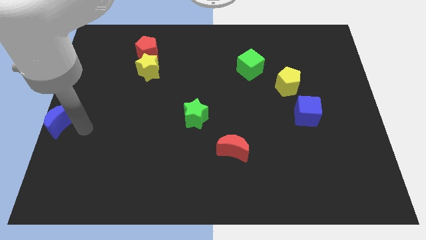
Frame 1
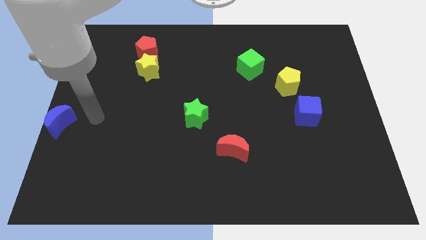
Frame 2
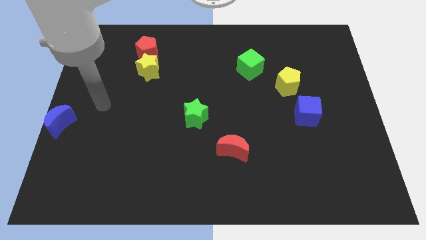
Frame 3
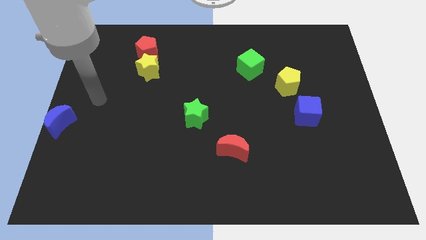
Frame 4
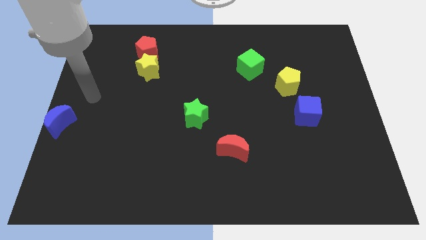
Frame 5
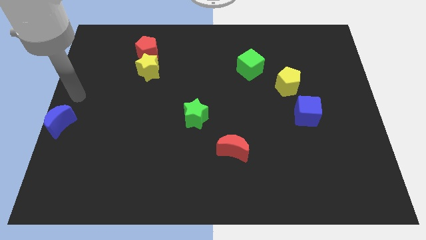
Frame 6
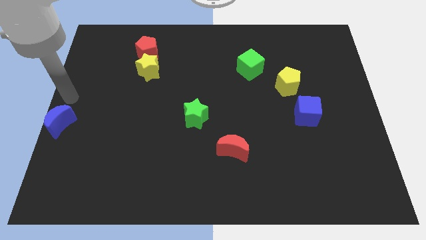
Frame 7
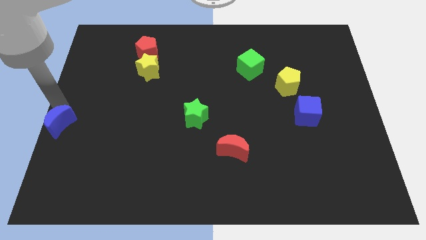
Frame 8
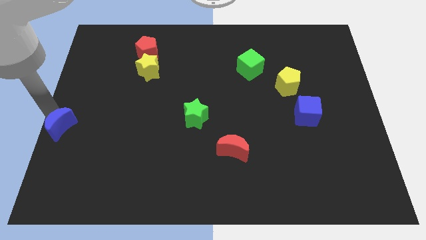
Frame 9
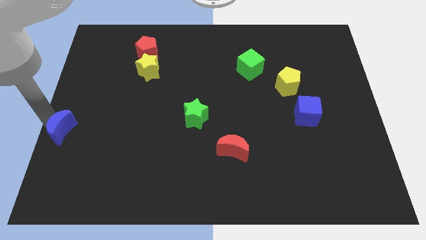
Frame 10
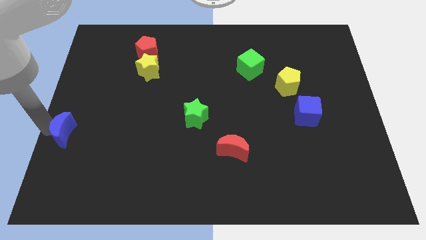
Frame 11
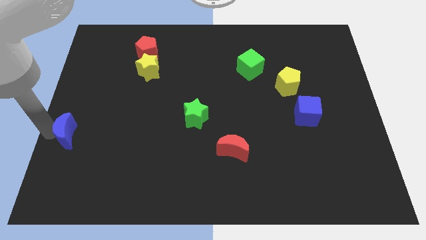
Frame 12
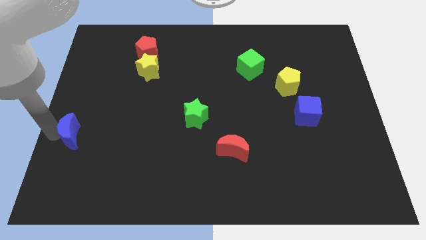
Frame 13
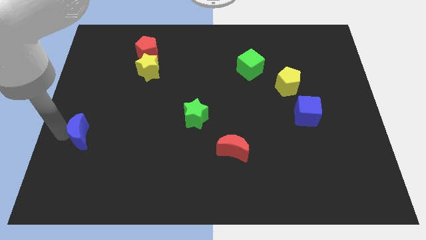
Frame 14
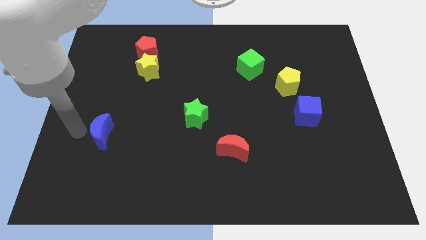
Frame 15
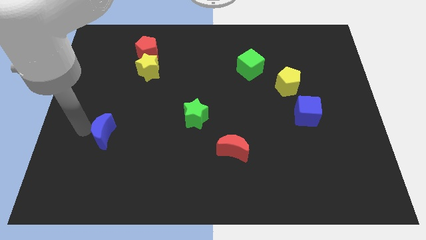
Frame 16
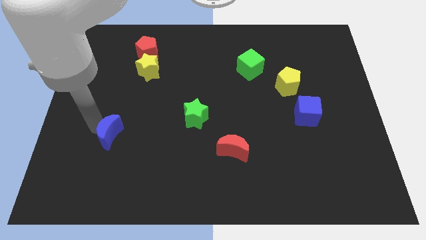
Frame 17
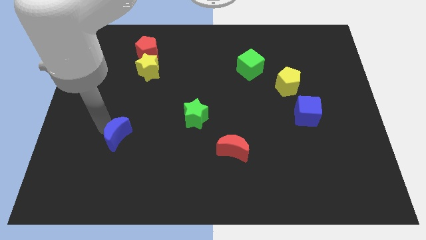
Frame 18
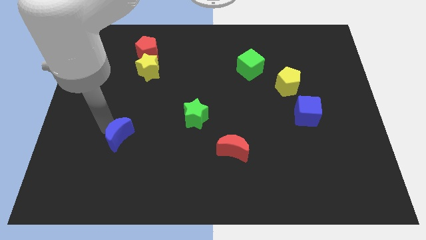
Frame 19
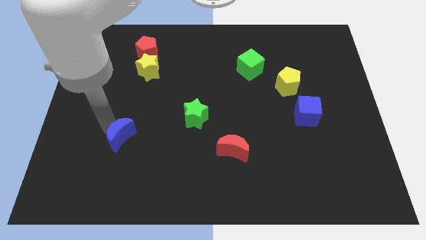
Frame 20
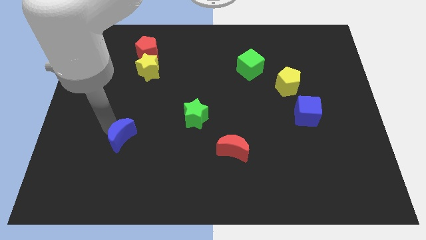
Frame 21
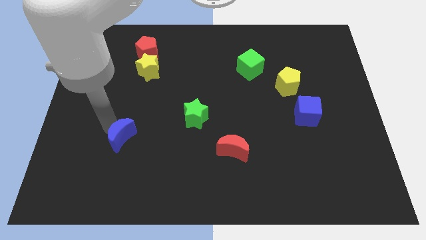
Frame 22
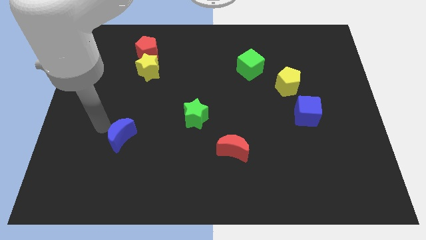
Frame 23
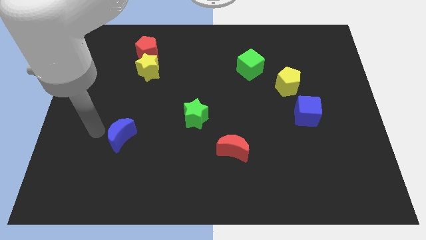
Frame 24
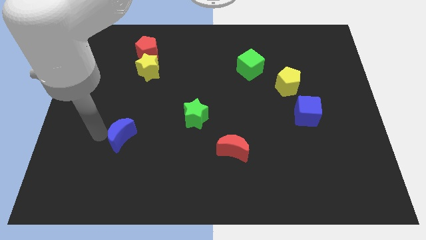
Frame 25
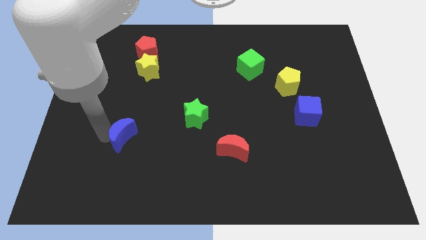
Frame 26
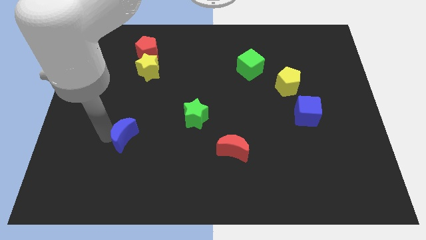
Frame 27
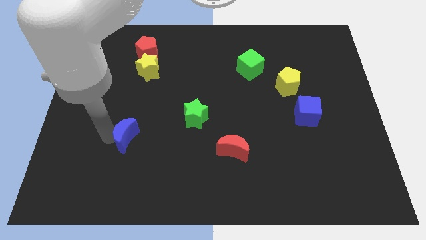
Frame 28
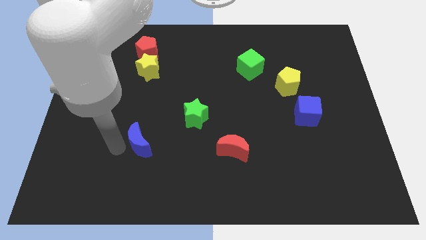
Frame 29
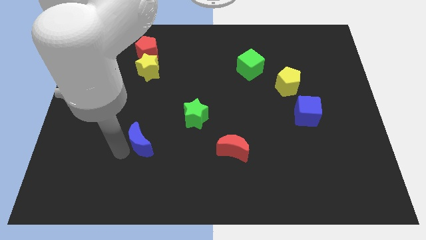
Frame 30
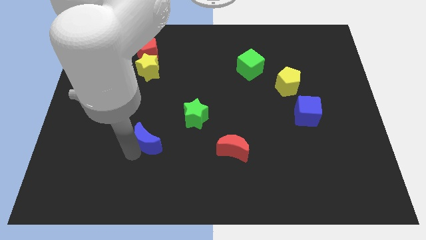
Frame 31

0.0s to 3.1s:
move the blue crescent to the bottom of the yellow star

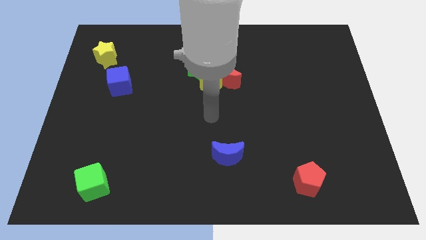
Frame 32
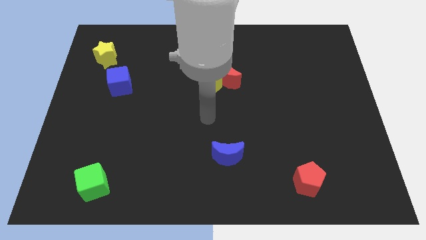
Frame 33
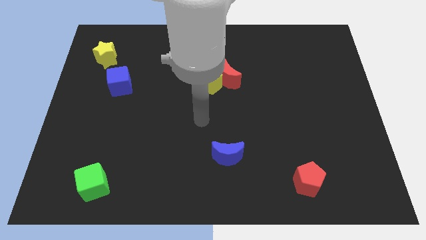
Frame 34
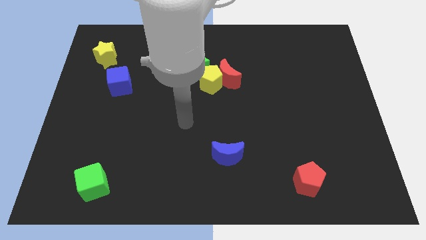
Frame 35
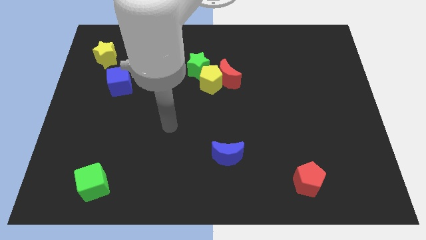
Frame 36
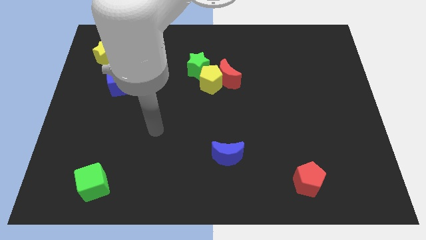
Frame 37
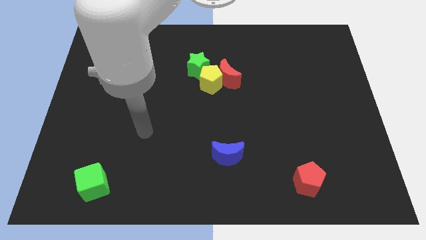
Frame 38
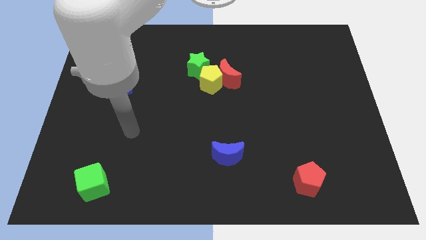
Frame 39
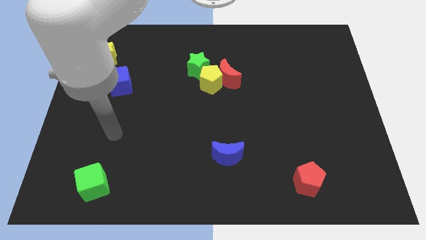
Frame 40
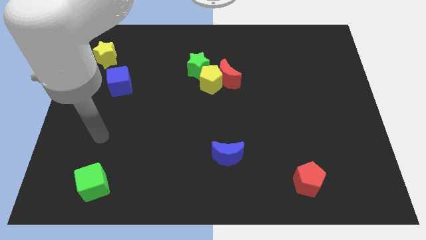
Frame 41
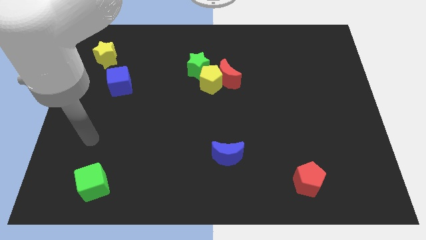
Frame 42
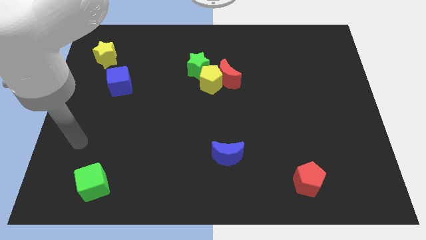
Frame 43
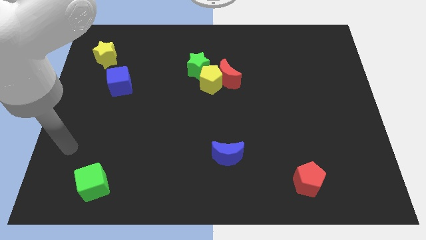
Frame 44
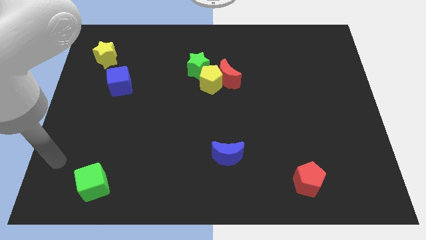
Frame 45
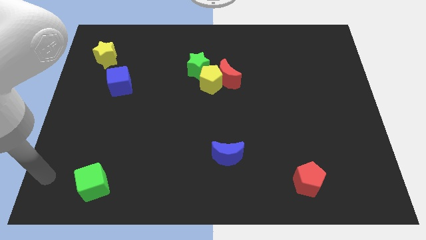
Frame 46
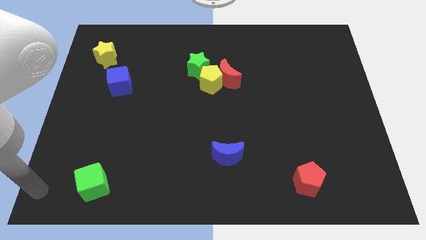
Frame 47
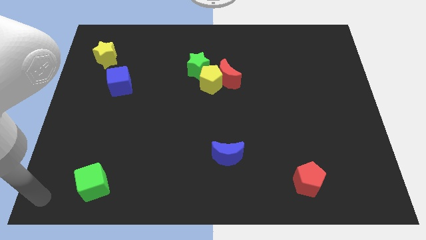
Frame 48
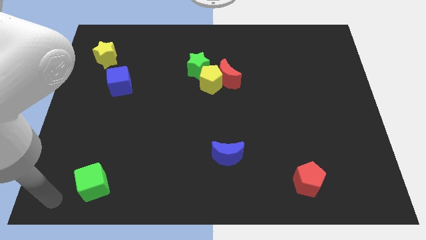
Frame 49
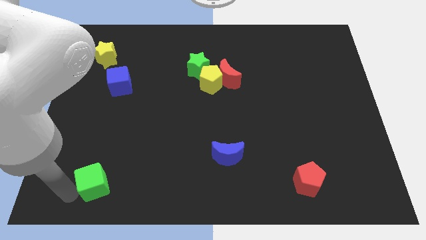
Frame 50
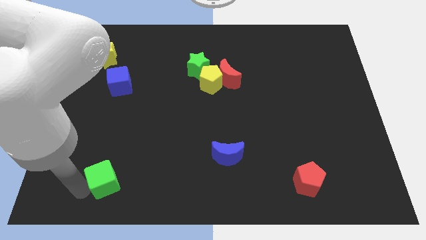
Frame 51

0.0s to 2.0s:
move your arm towards the green cube

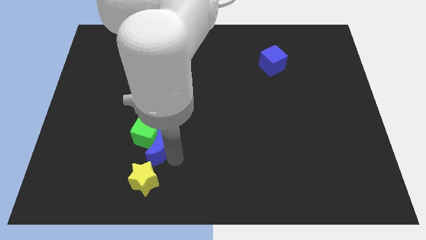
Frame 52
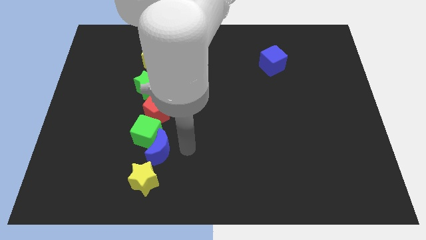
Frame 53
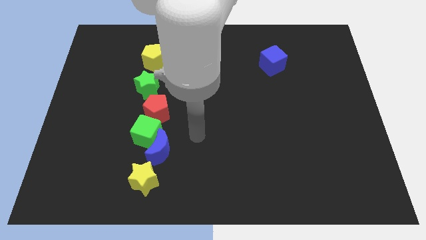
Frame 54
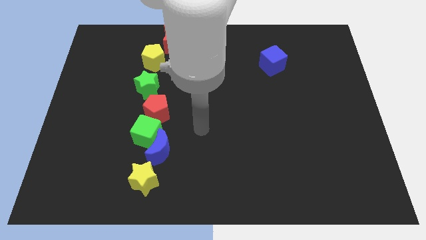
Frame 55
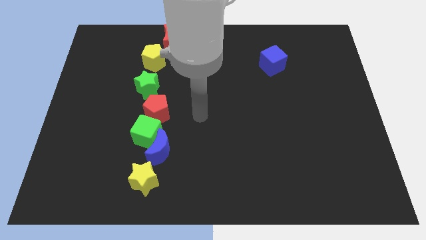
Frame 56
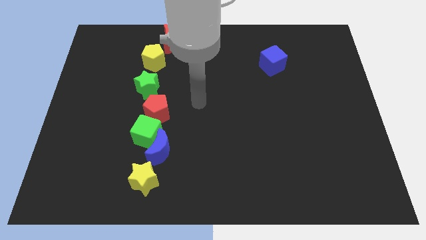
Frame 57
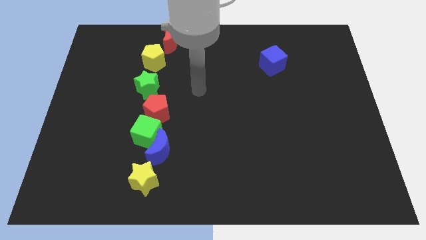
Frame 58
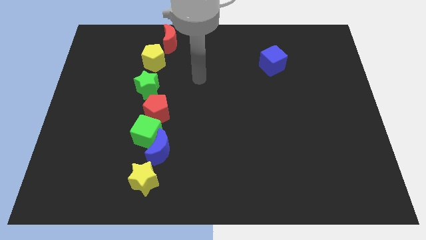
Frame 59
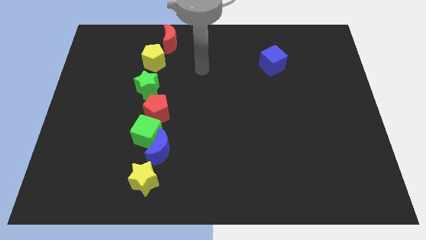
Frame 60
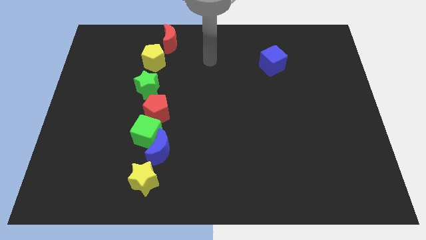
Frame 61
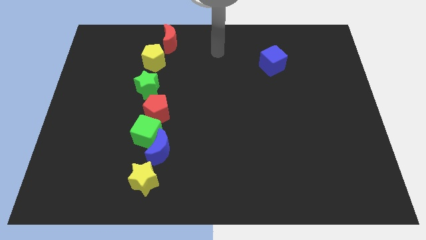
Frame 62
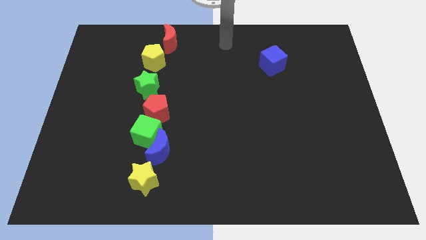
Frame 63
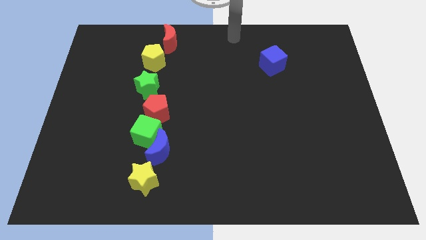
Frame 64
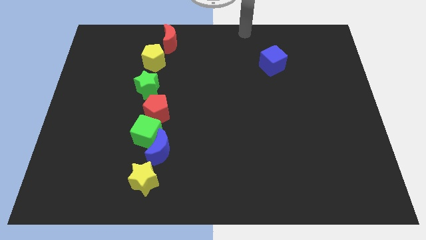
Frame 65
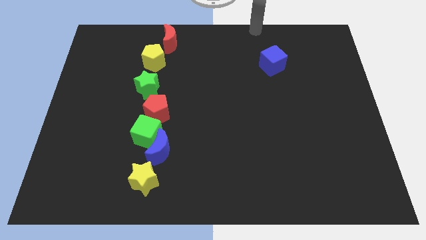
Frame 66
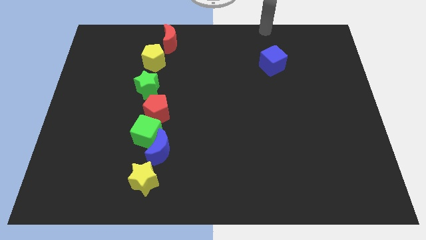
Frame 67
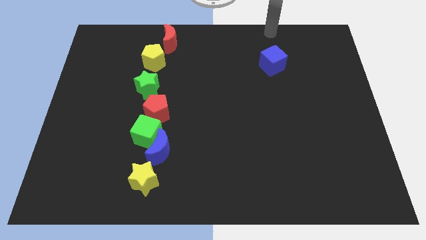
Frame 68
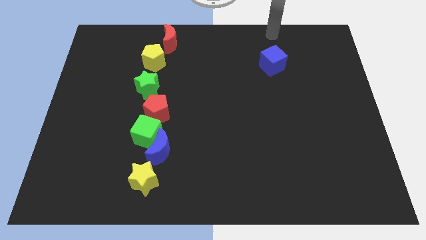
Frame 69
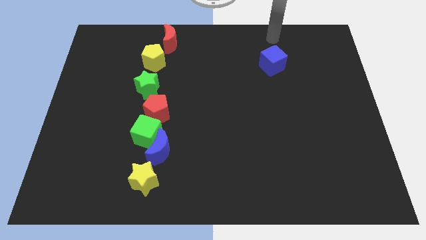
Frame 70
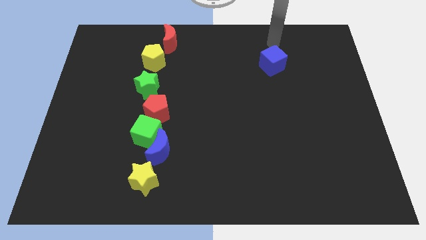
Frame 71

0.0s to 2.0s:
move your arm away from the blue moon

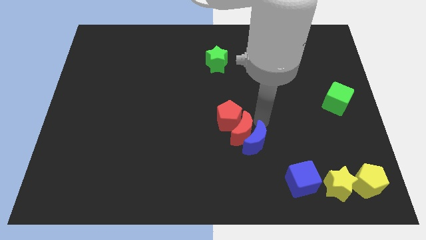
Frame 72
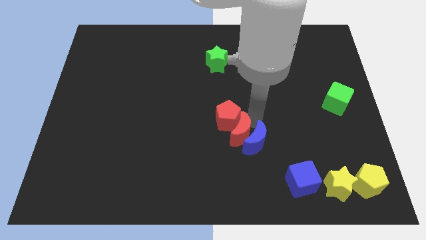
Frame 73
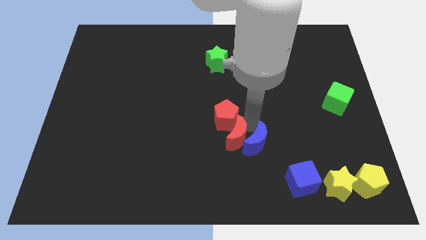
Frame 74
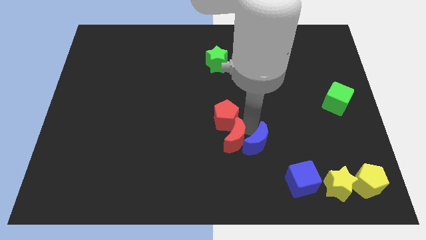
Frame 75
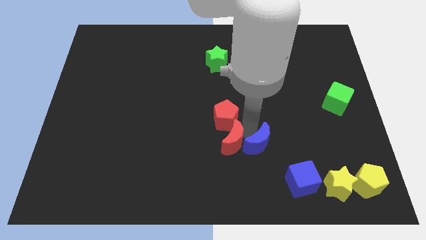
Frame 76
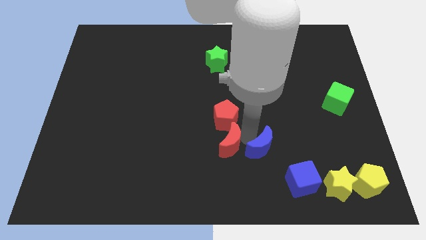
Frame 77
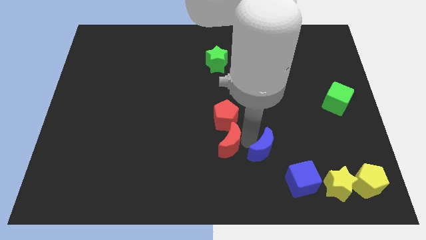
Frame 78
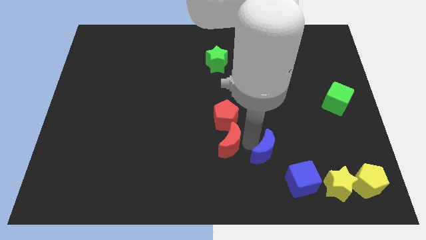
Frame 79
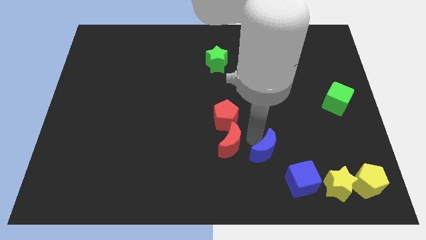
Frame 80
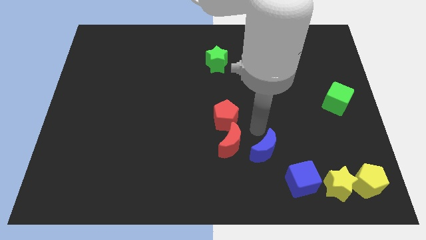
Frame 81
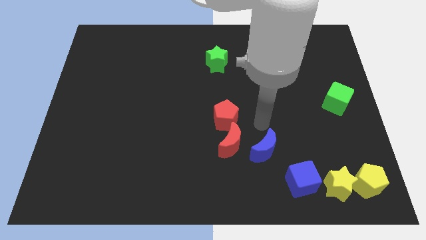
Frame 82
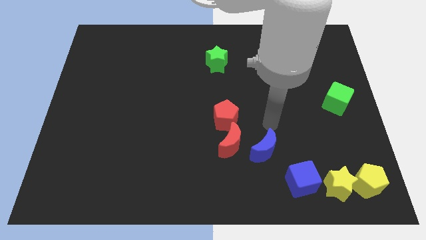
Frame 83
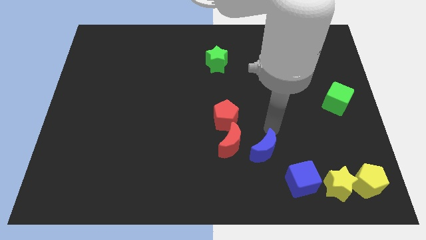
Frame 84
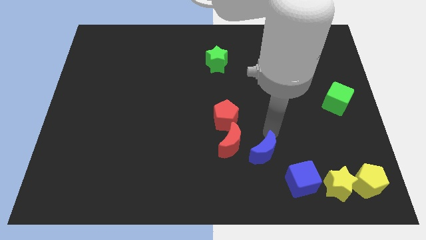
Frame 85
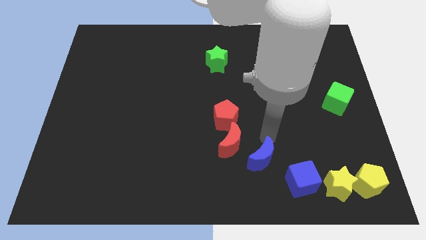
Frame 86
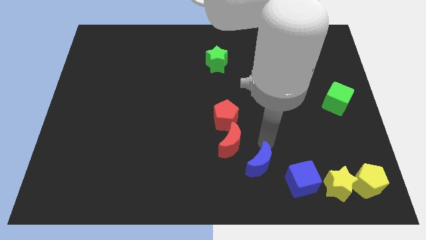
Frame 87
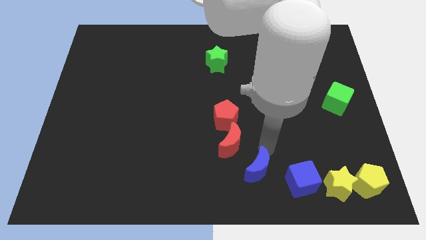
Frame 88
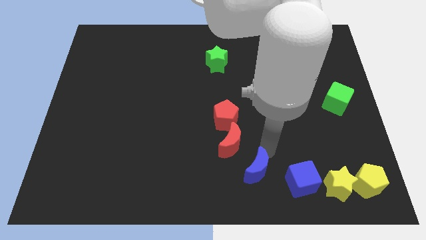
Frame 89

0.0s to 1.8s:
separate the red and blue moon

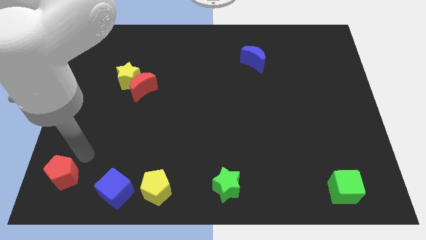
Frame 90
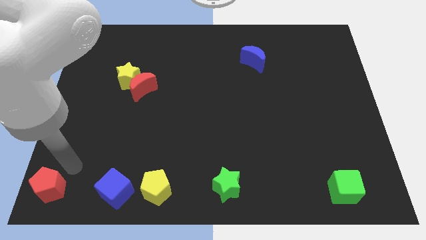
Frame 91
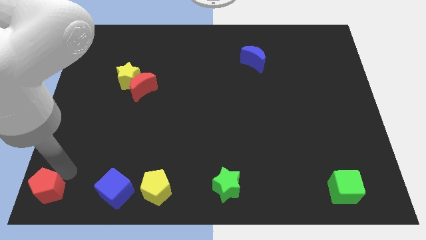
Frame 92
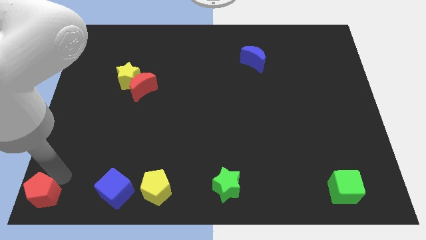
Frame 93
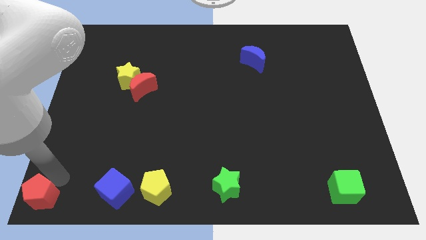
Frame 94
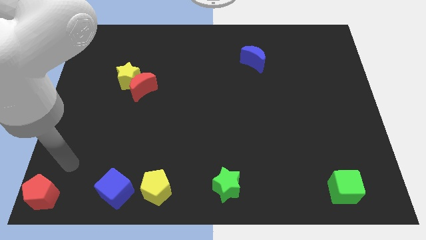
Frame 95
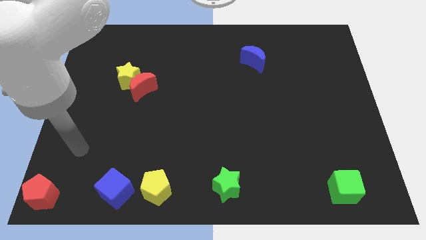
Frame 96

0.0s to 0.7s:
push red pentagon at bottom left end
